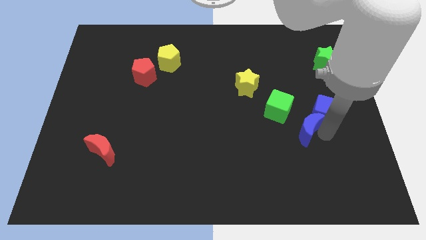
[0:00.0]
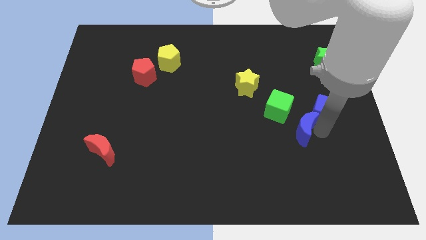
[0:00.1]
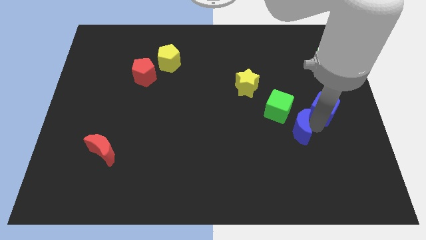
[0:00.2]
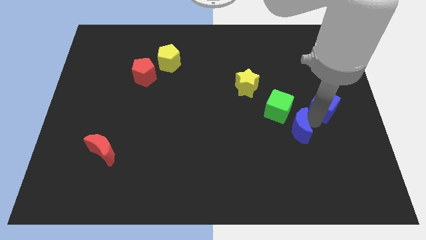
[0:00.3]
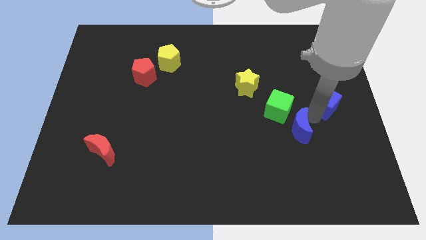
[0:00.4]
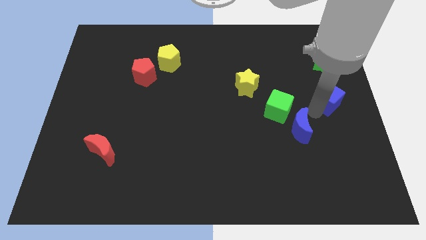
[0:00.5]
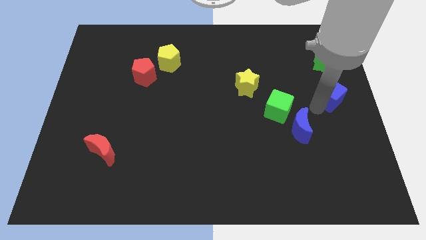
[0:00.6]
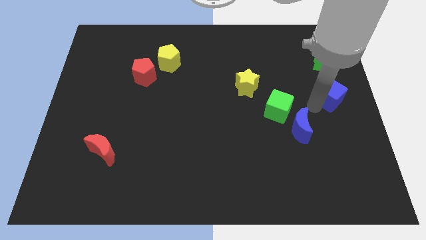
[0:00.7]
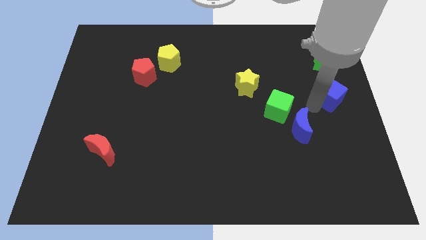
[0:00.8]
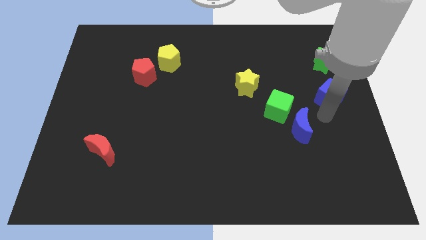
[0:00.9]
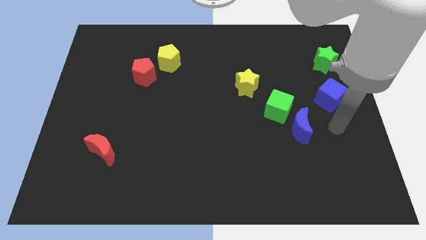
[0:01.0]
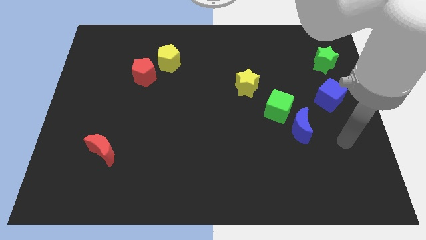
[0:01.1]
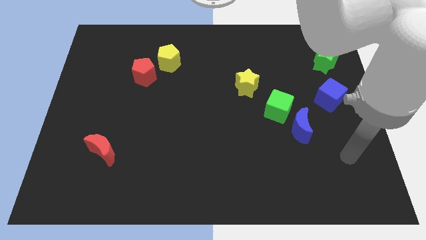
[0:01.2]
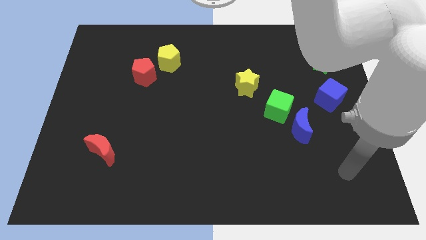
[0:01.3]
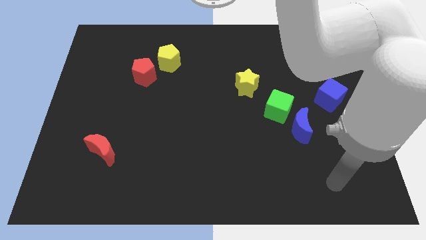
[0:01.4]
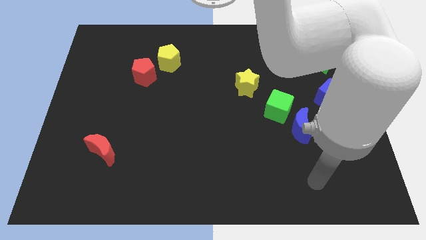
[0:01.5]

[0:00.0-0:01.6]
push the blue cube to center right

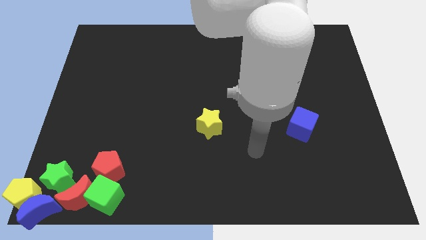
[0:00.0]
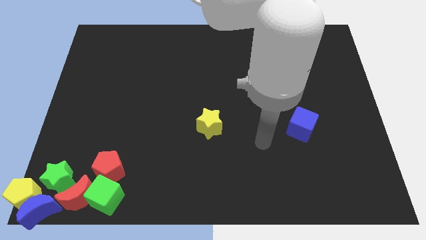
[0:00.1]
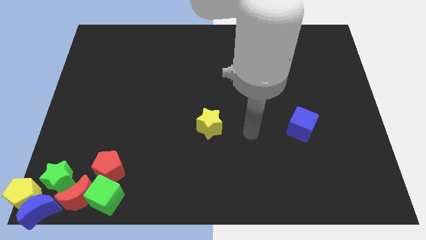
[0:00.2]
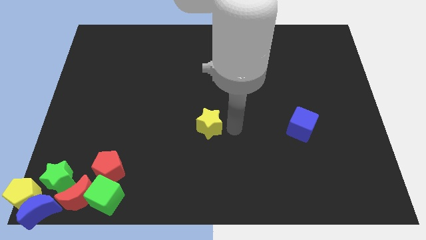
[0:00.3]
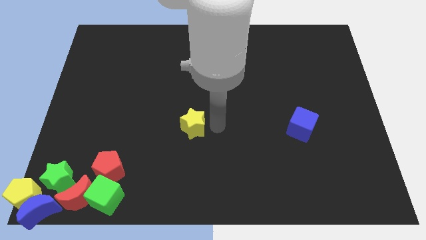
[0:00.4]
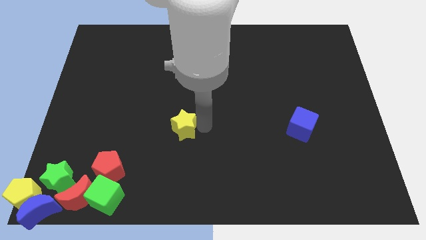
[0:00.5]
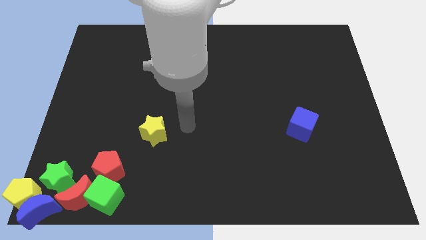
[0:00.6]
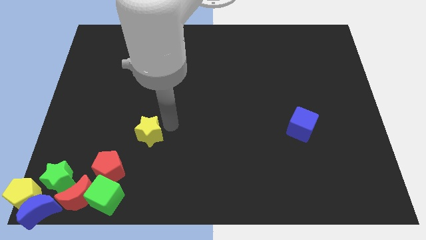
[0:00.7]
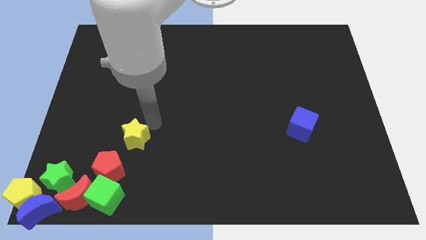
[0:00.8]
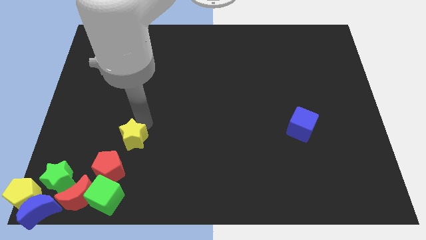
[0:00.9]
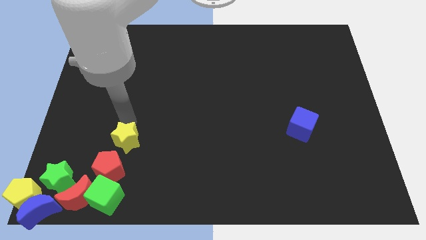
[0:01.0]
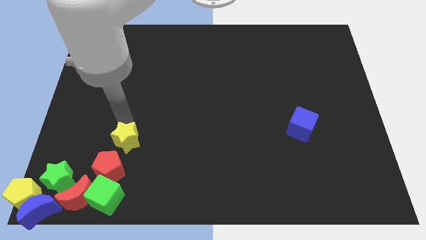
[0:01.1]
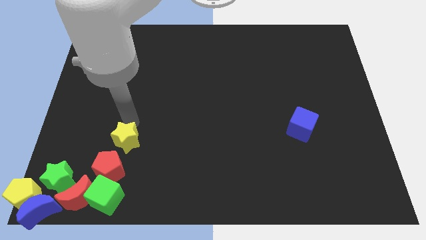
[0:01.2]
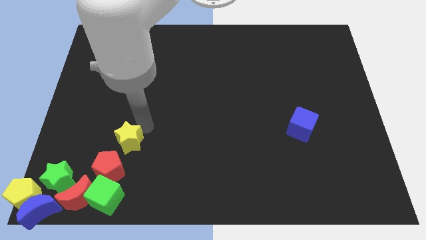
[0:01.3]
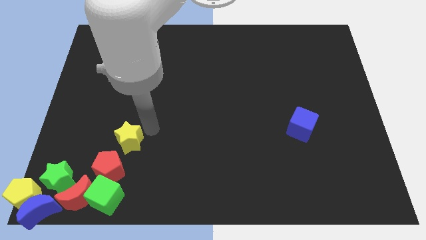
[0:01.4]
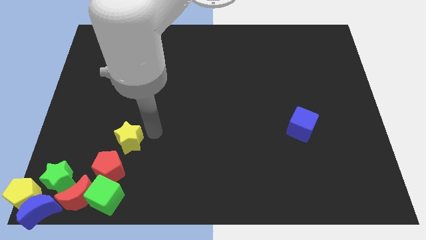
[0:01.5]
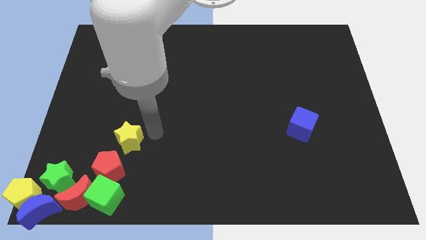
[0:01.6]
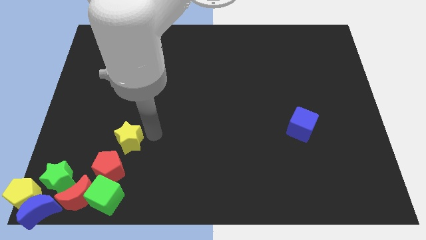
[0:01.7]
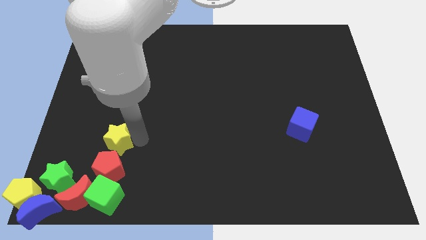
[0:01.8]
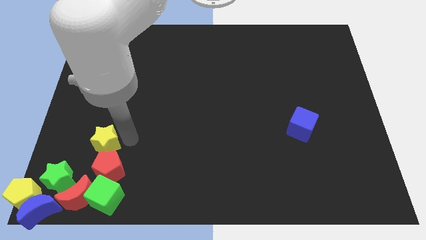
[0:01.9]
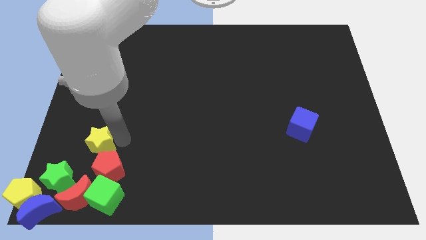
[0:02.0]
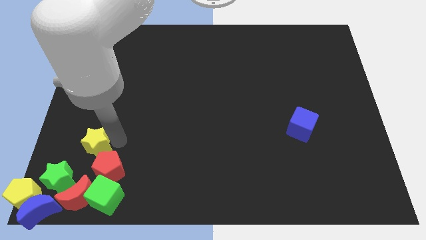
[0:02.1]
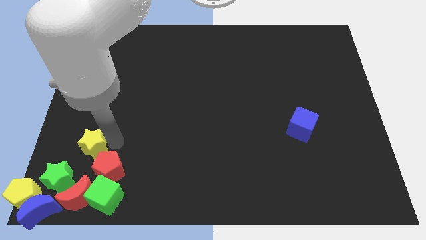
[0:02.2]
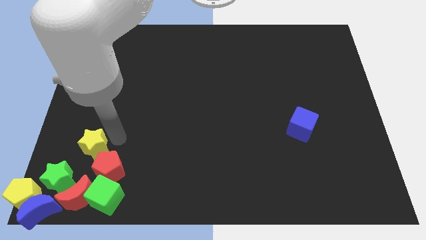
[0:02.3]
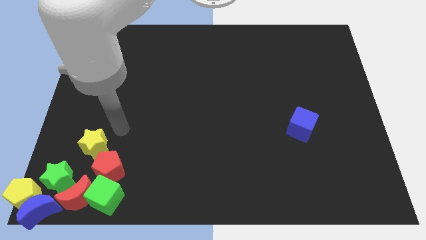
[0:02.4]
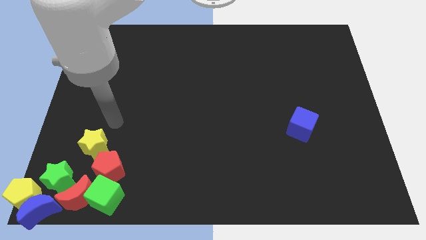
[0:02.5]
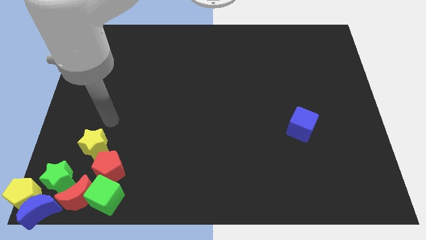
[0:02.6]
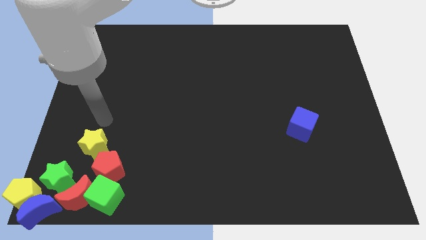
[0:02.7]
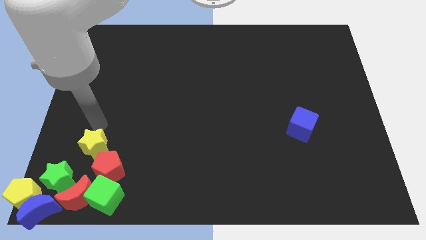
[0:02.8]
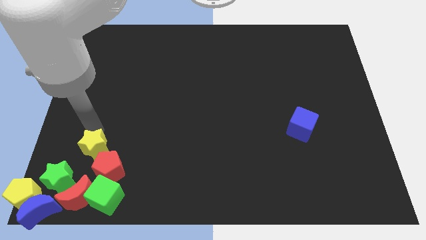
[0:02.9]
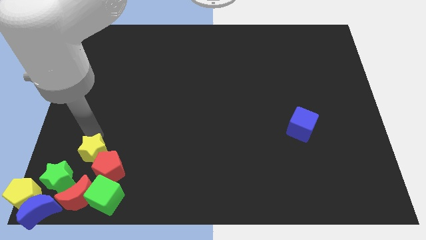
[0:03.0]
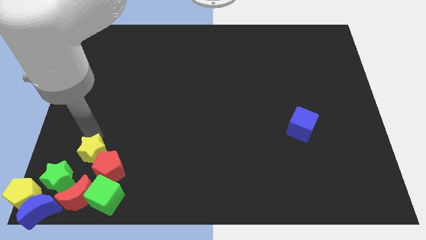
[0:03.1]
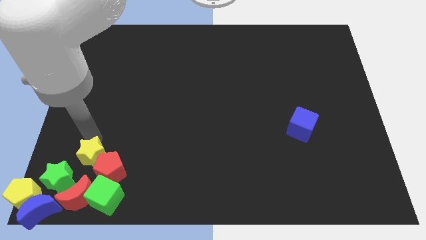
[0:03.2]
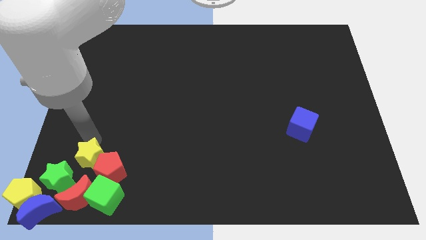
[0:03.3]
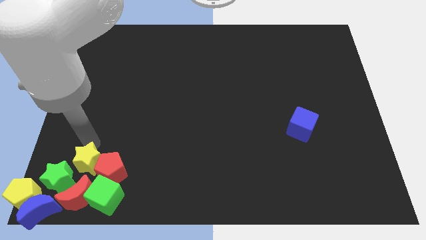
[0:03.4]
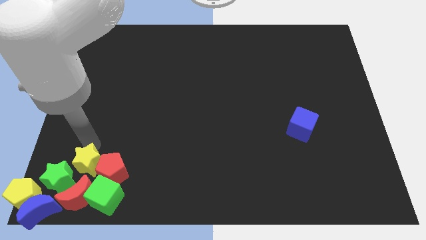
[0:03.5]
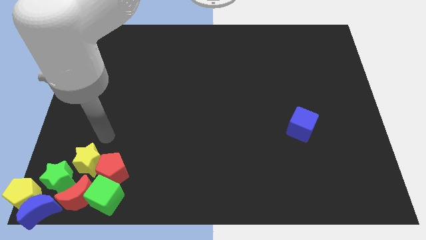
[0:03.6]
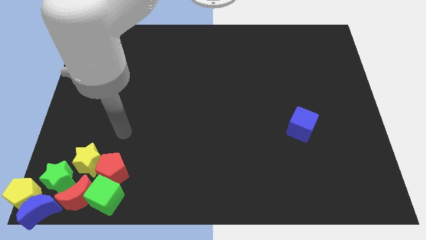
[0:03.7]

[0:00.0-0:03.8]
put the yellow star close to the left side of the red pentagon

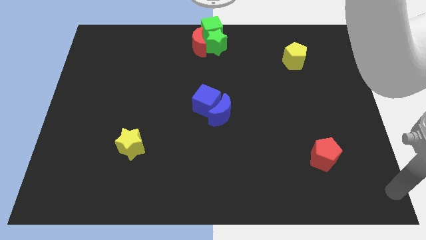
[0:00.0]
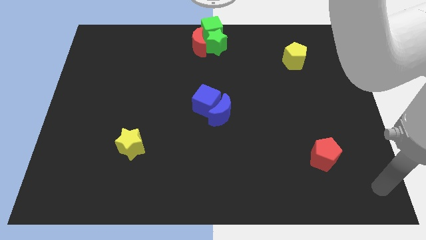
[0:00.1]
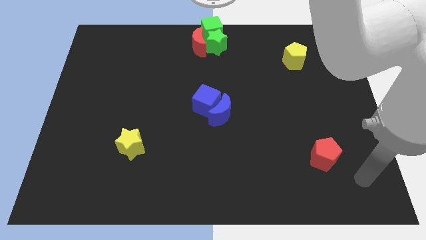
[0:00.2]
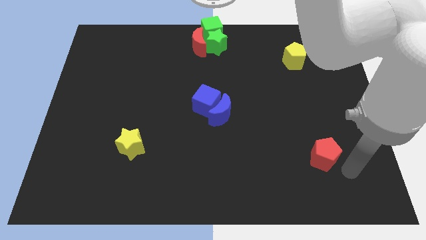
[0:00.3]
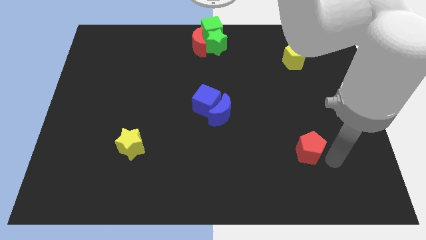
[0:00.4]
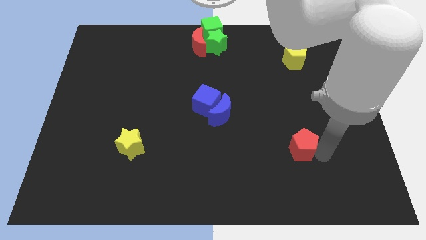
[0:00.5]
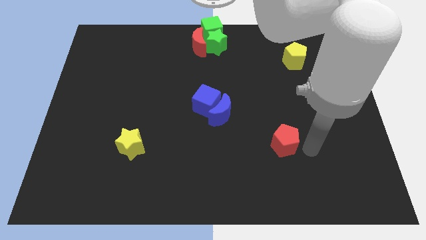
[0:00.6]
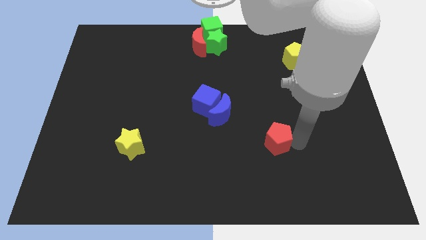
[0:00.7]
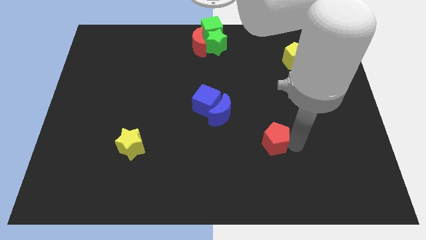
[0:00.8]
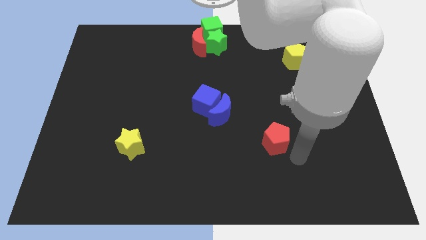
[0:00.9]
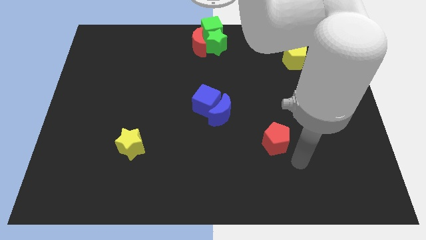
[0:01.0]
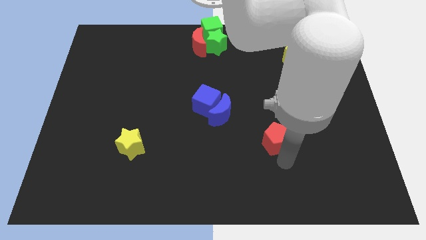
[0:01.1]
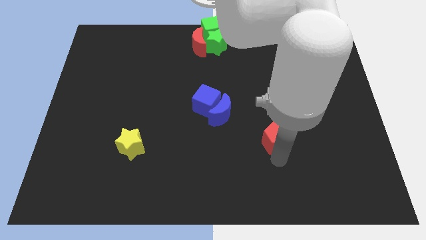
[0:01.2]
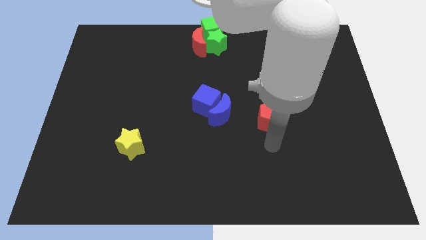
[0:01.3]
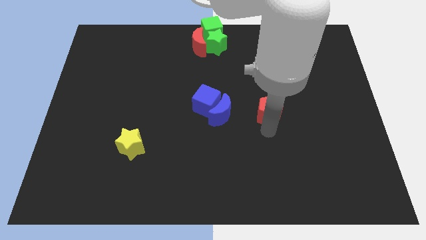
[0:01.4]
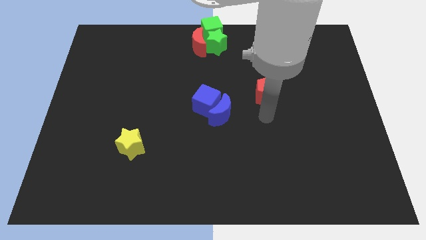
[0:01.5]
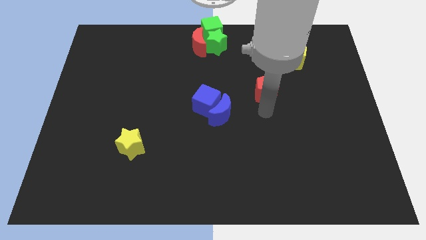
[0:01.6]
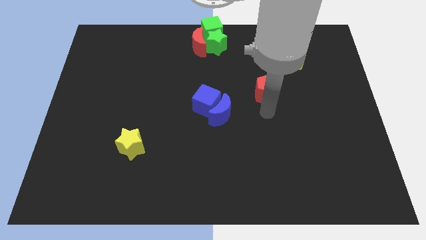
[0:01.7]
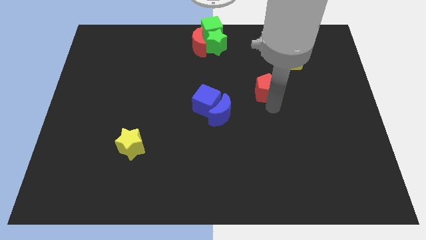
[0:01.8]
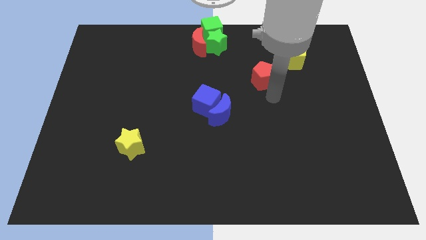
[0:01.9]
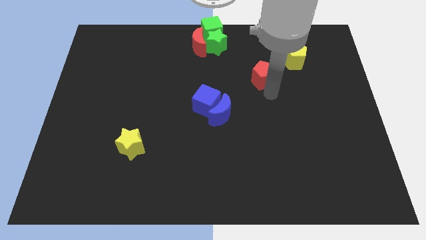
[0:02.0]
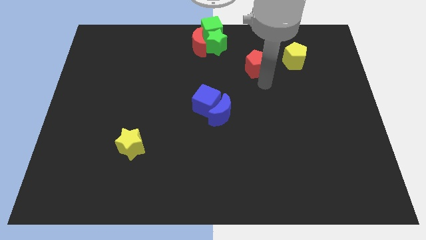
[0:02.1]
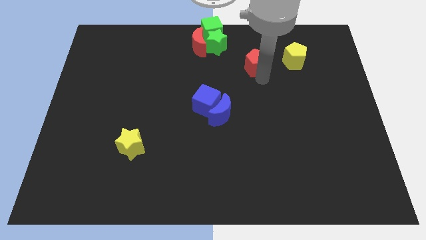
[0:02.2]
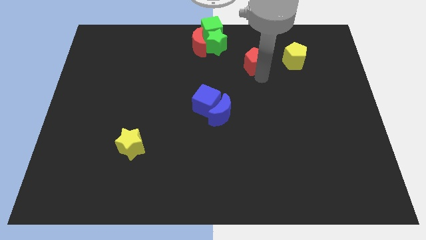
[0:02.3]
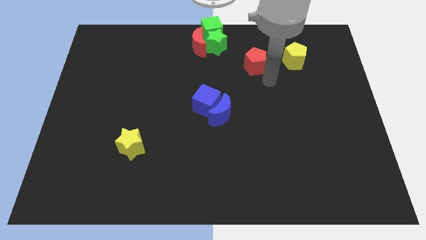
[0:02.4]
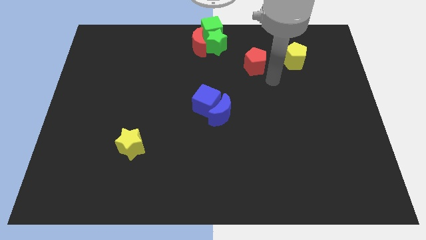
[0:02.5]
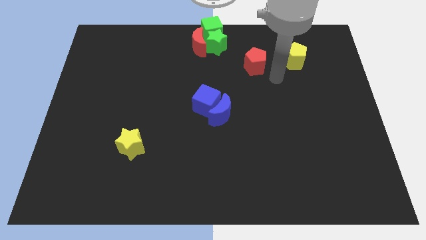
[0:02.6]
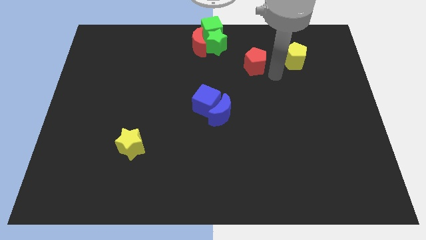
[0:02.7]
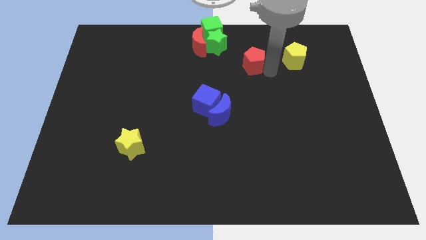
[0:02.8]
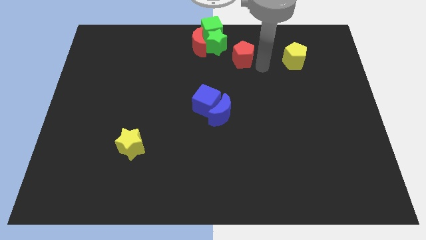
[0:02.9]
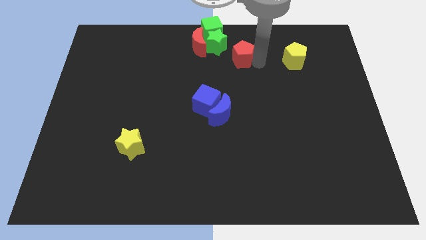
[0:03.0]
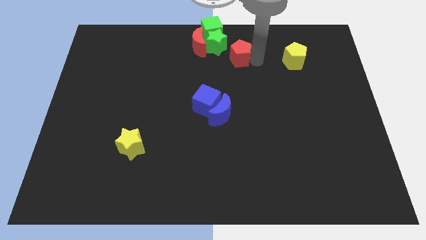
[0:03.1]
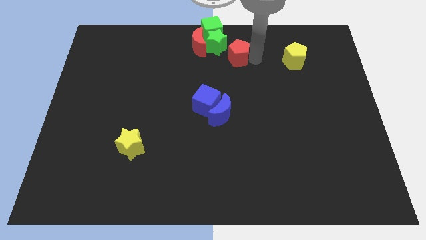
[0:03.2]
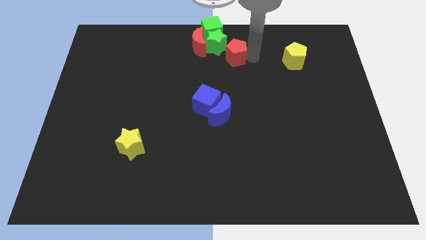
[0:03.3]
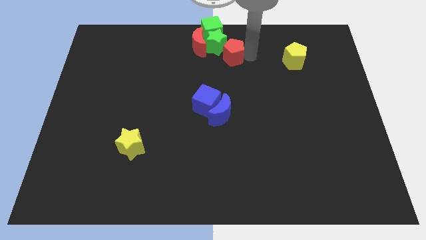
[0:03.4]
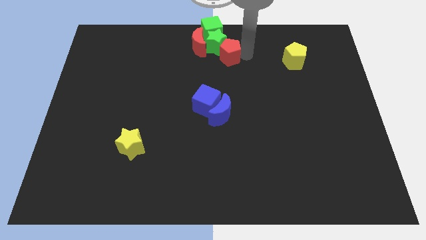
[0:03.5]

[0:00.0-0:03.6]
move the red pentagon into the green star
